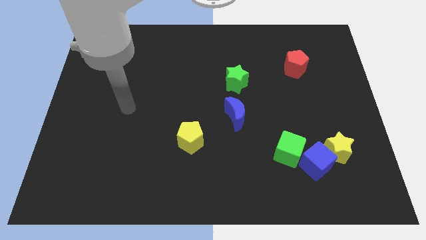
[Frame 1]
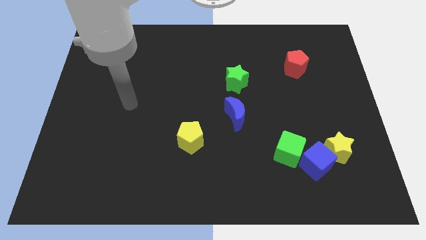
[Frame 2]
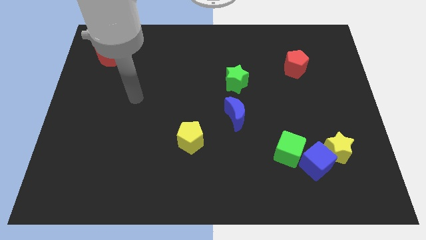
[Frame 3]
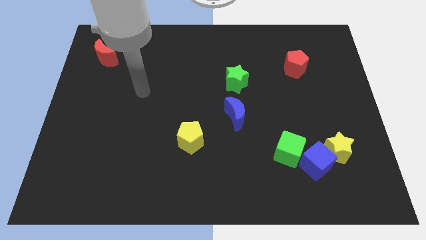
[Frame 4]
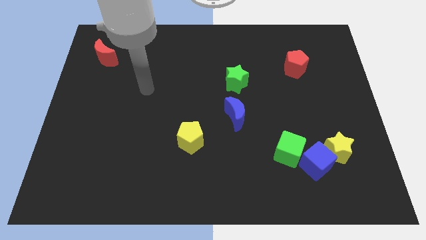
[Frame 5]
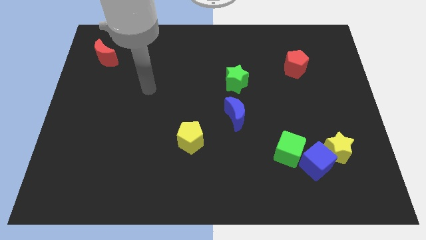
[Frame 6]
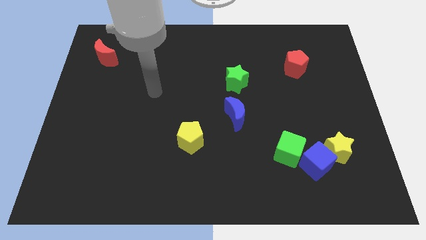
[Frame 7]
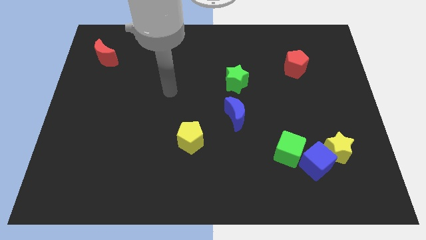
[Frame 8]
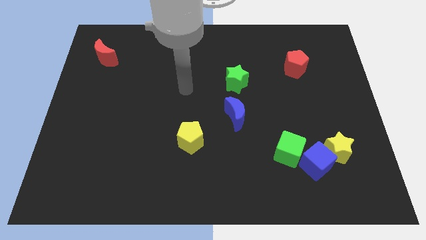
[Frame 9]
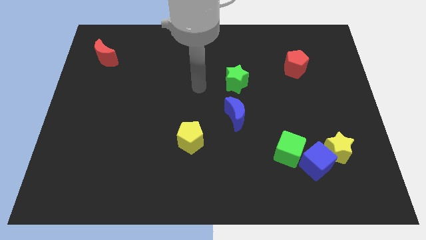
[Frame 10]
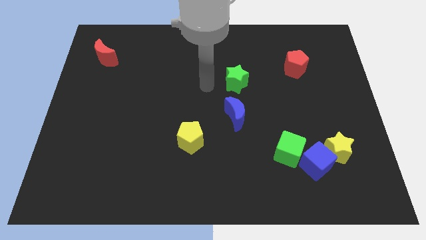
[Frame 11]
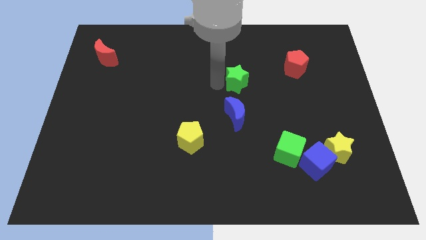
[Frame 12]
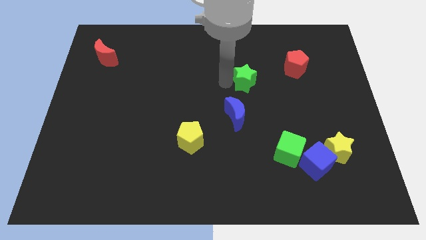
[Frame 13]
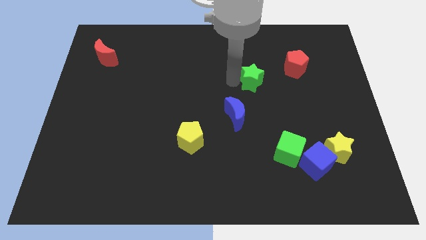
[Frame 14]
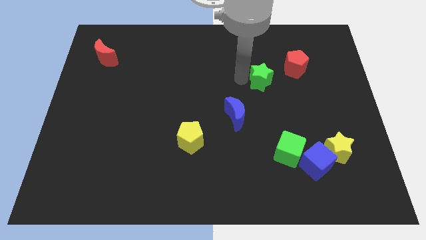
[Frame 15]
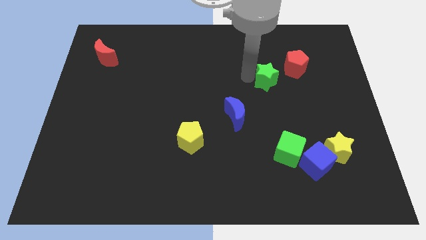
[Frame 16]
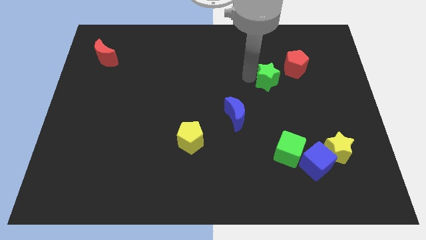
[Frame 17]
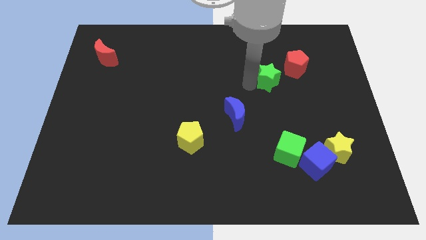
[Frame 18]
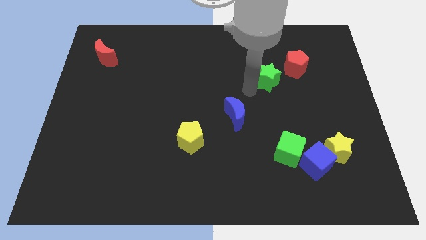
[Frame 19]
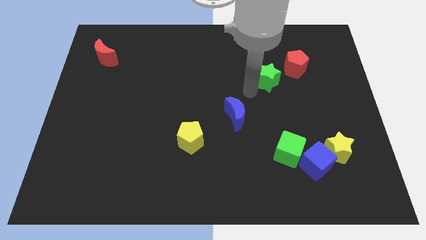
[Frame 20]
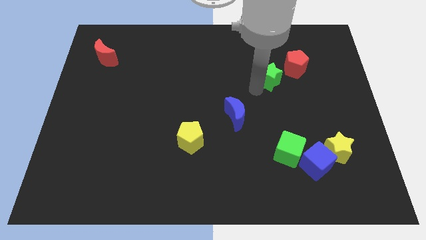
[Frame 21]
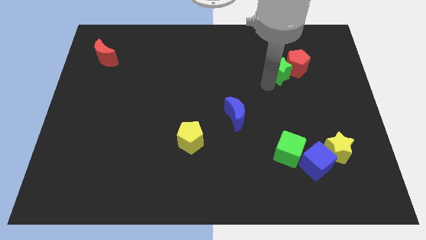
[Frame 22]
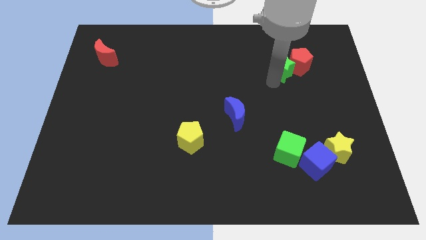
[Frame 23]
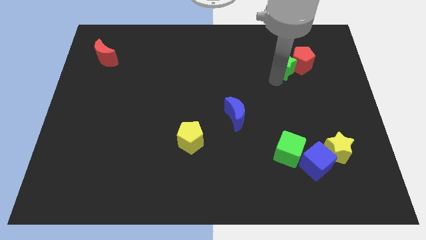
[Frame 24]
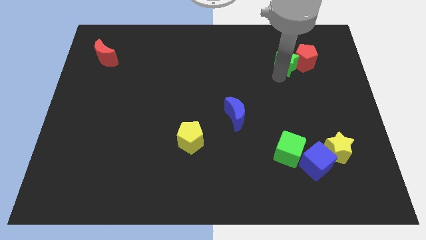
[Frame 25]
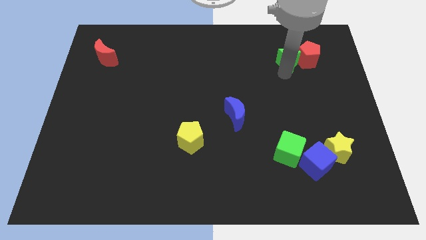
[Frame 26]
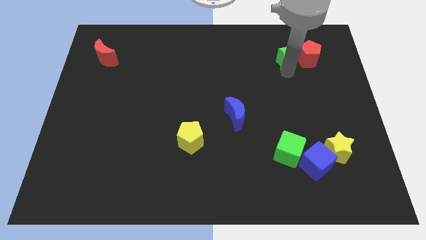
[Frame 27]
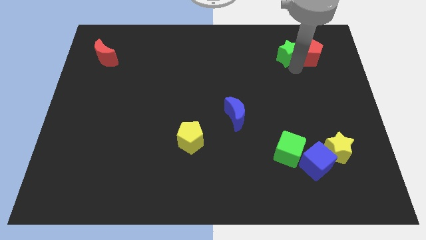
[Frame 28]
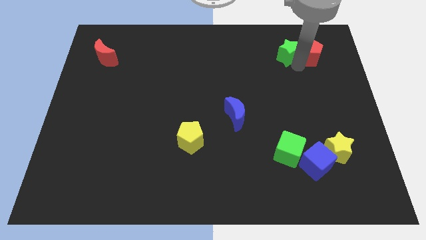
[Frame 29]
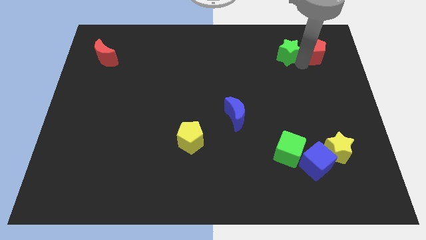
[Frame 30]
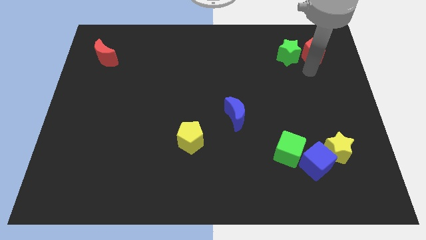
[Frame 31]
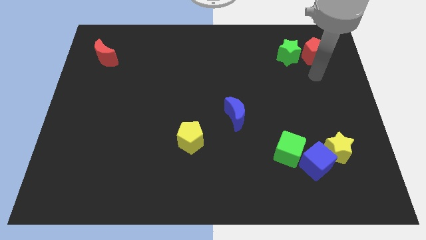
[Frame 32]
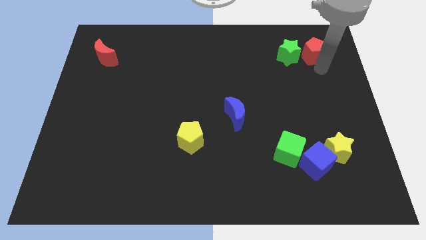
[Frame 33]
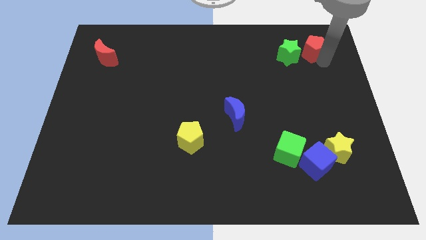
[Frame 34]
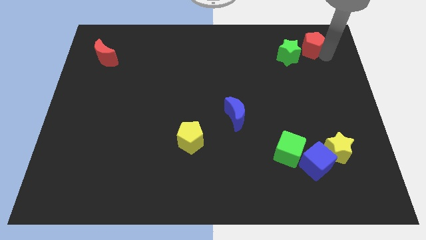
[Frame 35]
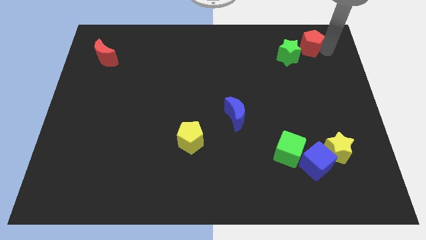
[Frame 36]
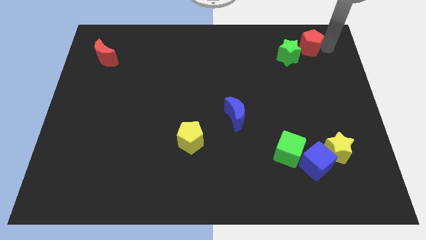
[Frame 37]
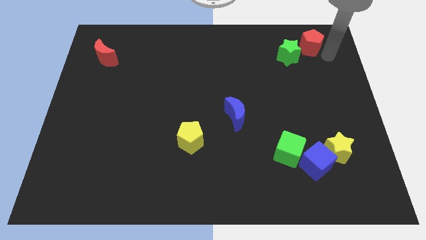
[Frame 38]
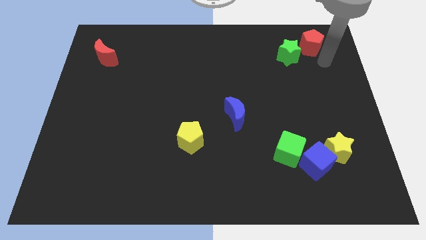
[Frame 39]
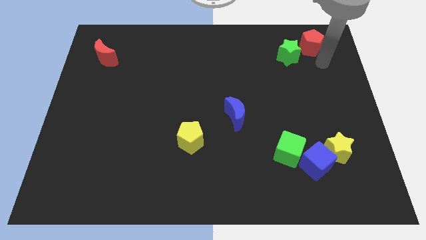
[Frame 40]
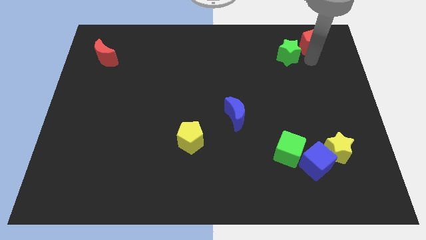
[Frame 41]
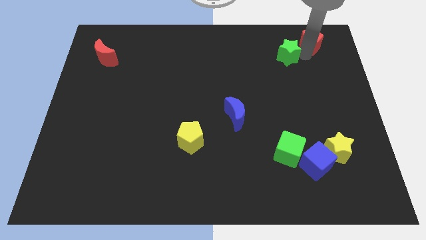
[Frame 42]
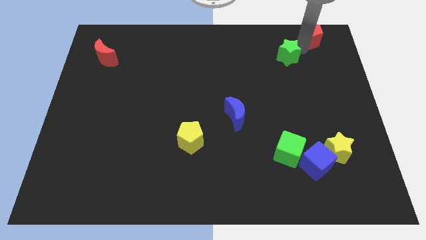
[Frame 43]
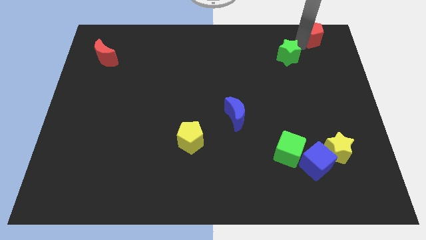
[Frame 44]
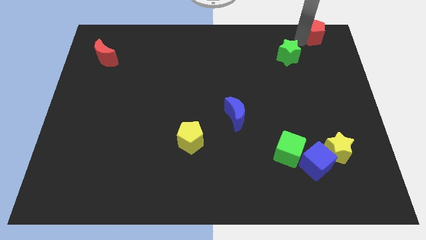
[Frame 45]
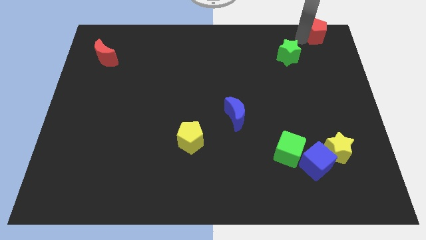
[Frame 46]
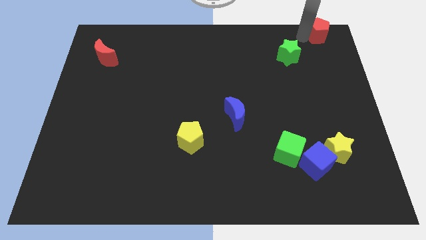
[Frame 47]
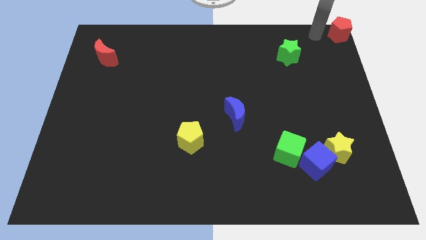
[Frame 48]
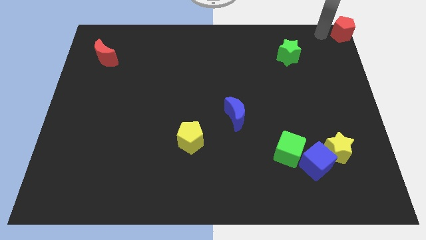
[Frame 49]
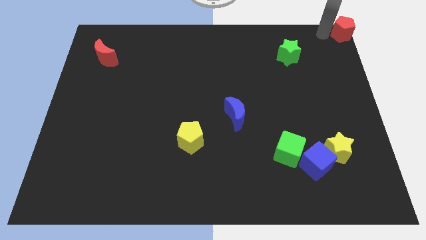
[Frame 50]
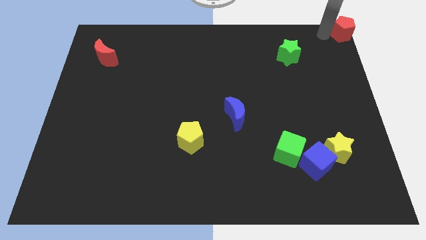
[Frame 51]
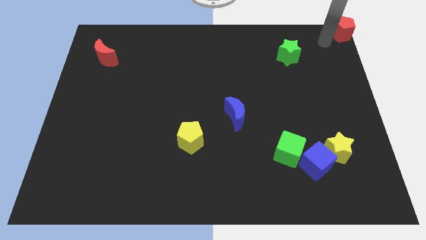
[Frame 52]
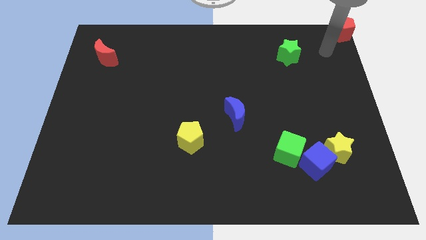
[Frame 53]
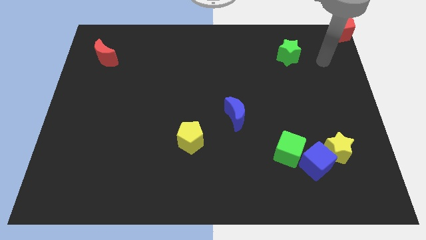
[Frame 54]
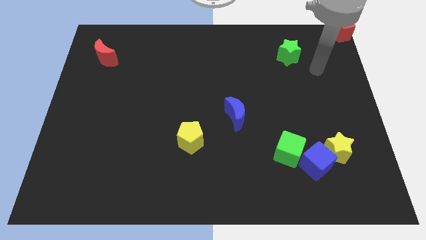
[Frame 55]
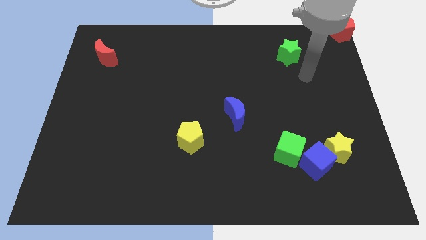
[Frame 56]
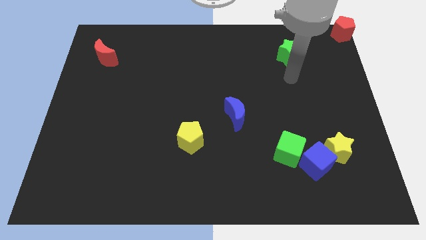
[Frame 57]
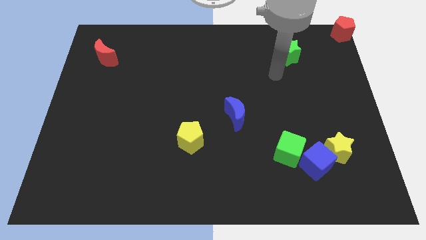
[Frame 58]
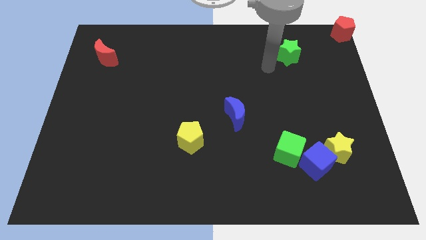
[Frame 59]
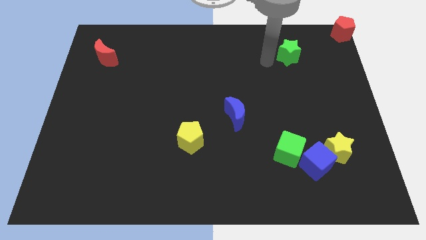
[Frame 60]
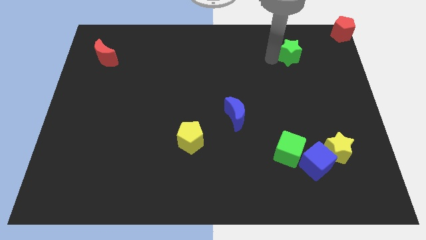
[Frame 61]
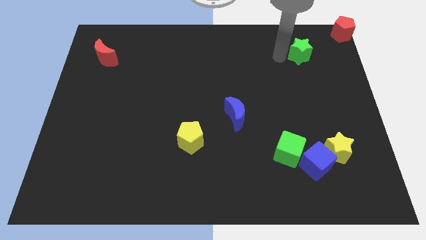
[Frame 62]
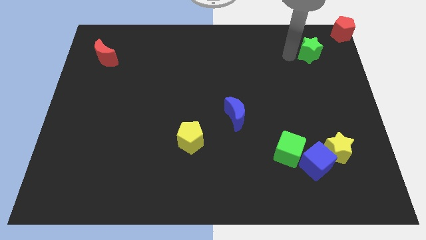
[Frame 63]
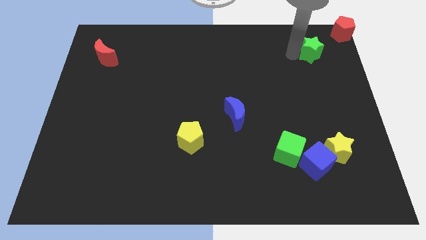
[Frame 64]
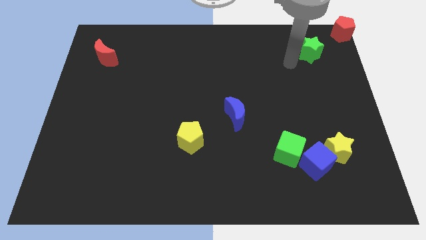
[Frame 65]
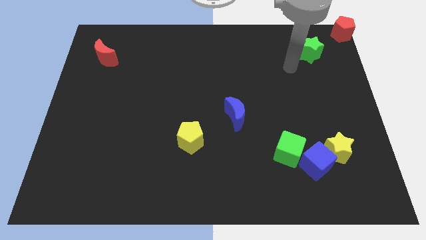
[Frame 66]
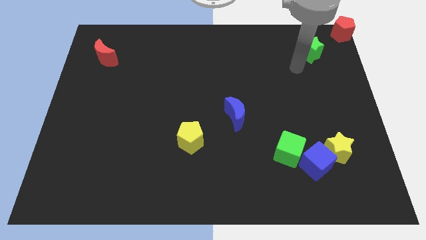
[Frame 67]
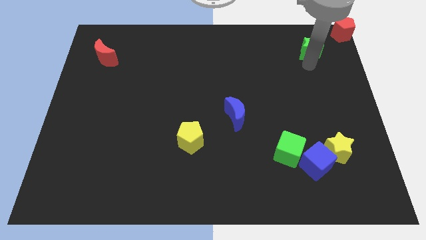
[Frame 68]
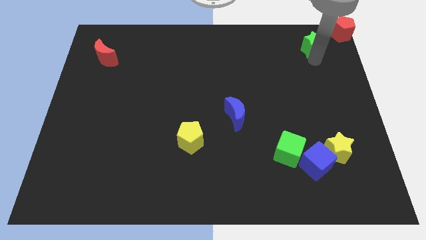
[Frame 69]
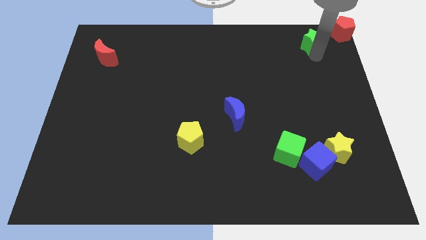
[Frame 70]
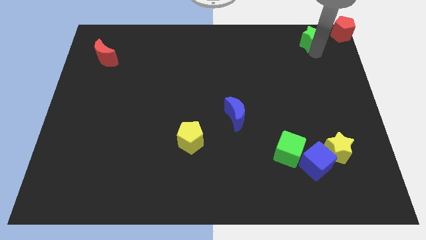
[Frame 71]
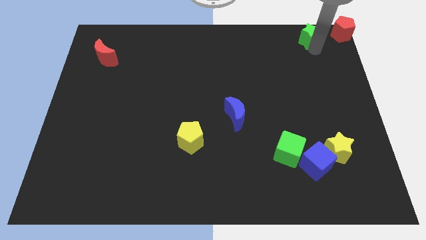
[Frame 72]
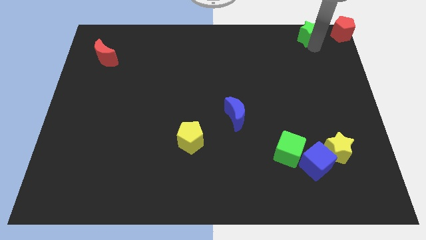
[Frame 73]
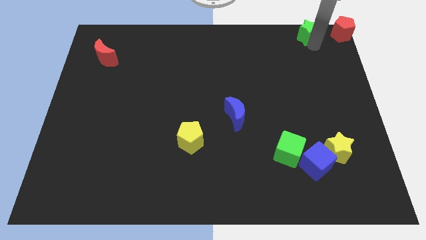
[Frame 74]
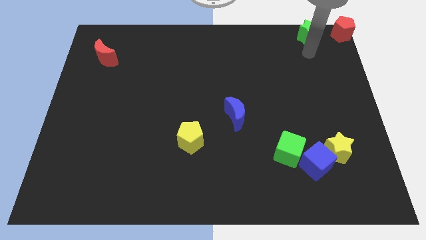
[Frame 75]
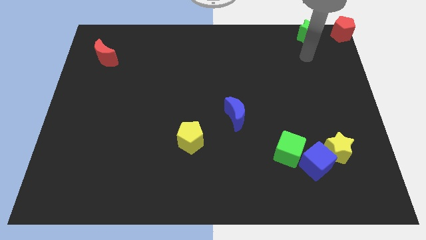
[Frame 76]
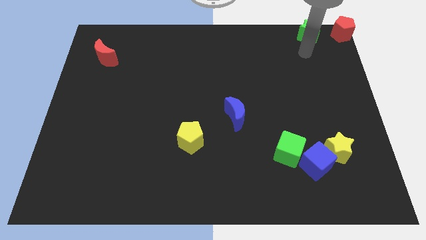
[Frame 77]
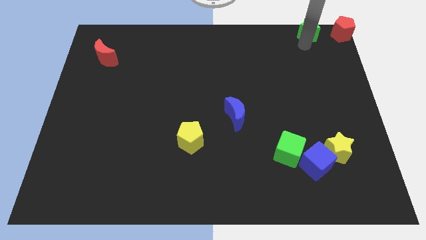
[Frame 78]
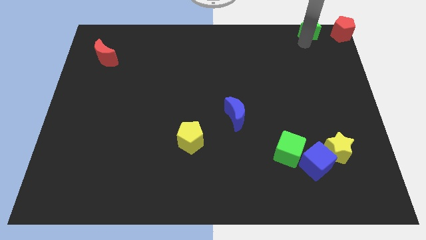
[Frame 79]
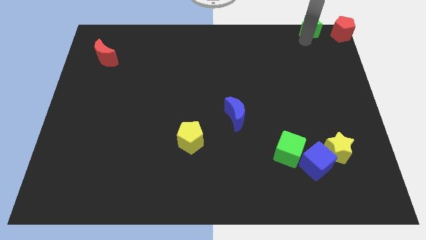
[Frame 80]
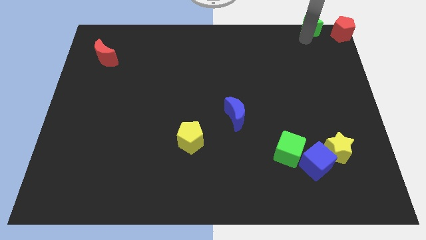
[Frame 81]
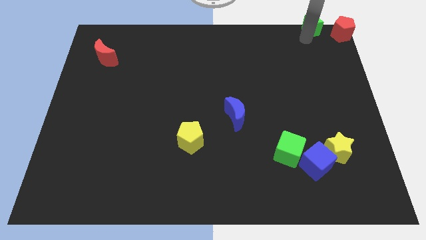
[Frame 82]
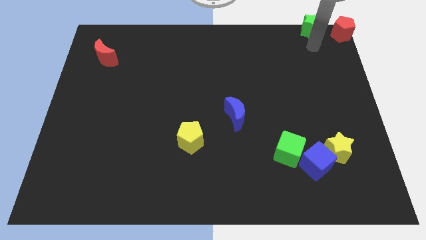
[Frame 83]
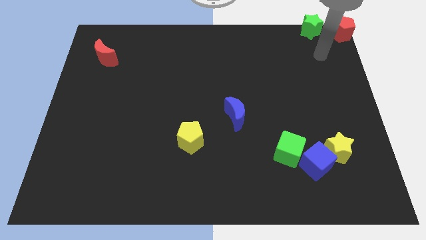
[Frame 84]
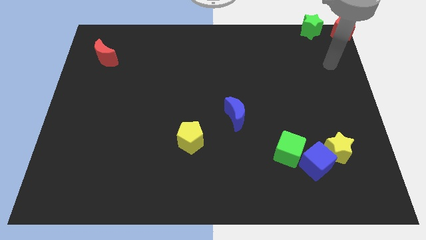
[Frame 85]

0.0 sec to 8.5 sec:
place the red pentagon and green star in a horizontal line at the top right corner of the board

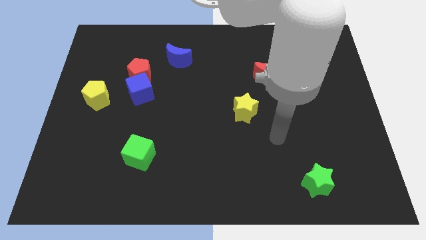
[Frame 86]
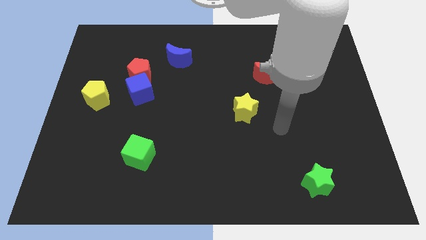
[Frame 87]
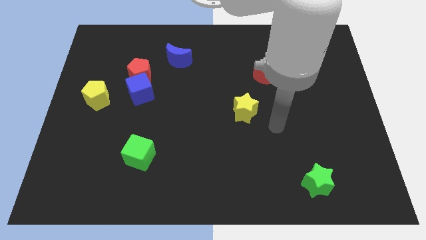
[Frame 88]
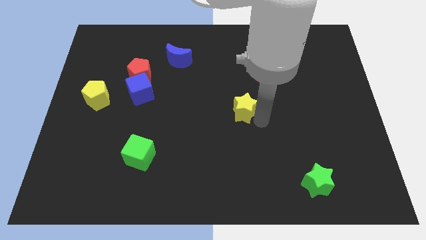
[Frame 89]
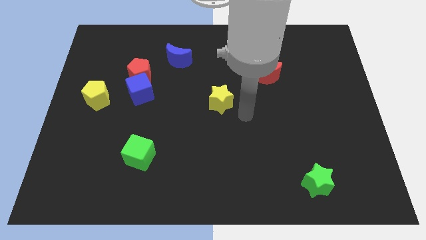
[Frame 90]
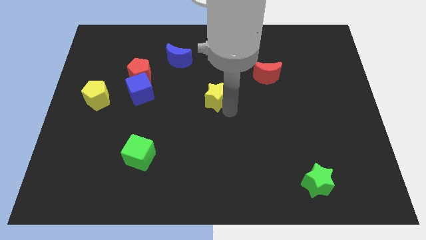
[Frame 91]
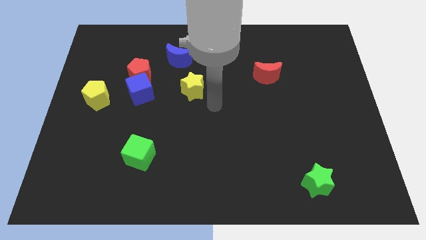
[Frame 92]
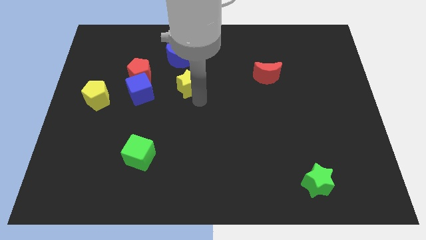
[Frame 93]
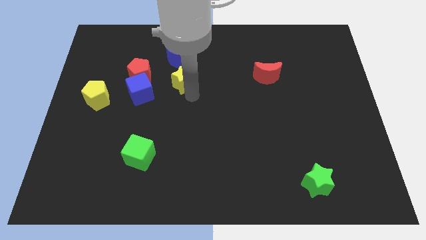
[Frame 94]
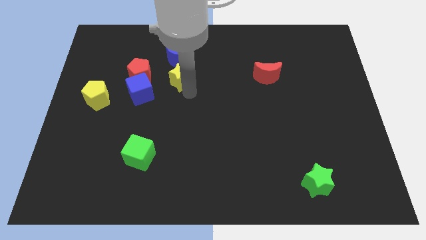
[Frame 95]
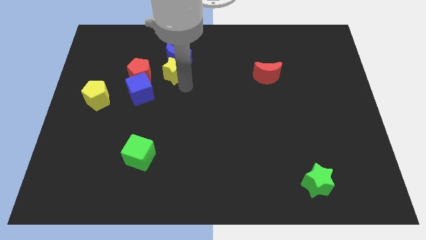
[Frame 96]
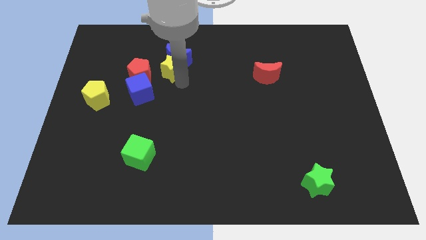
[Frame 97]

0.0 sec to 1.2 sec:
place the yellow star below the blue crescent
